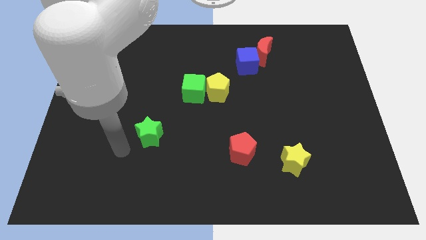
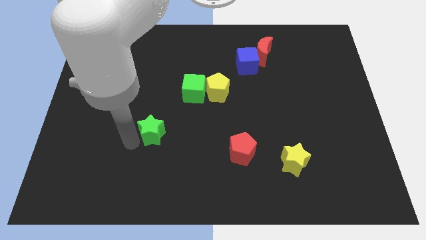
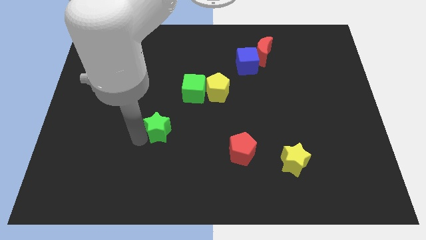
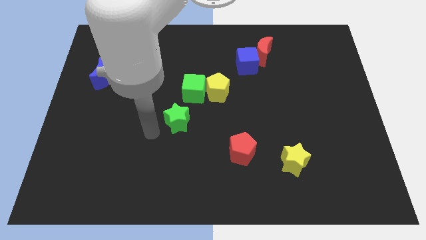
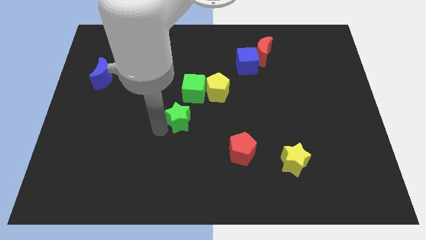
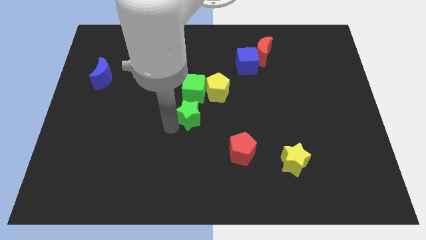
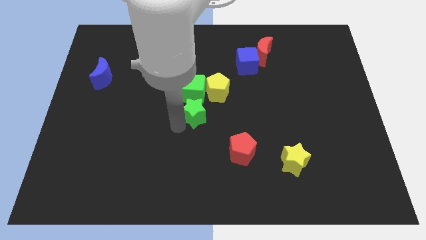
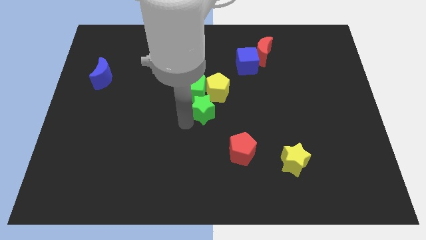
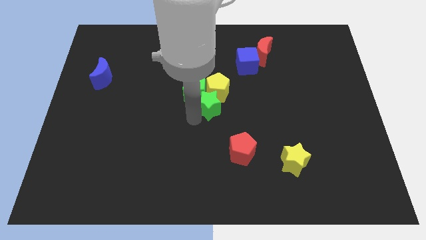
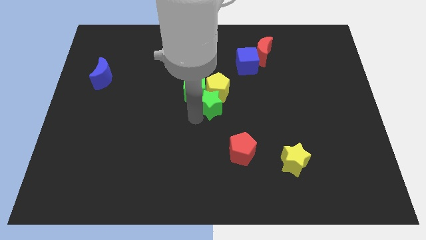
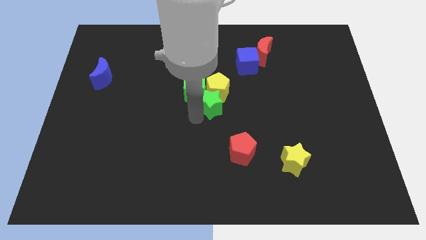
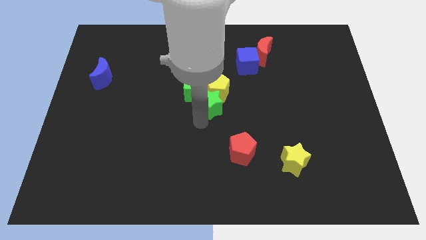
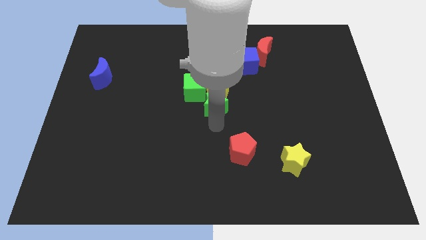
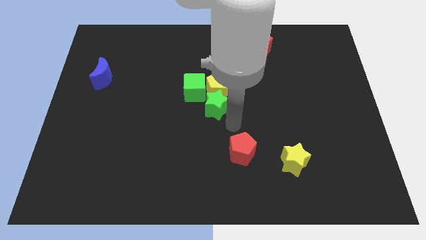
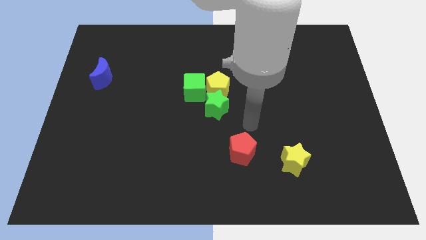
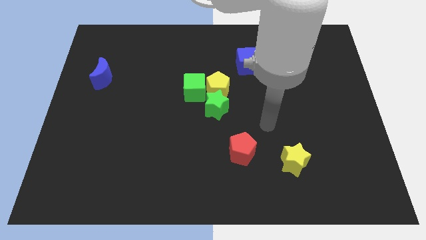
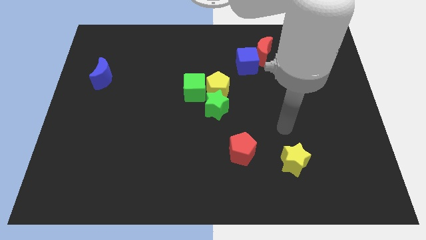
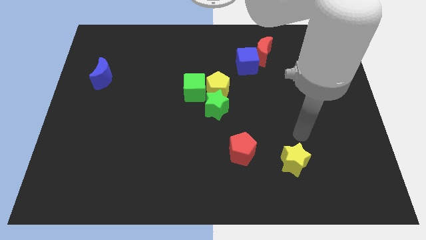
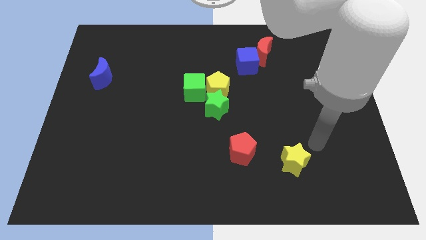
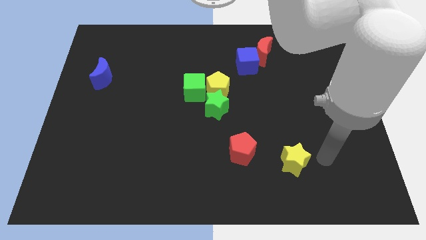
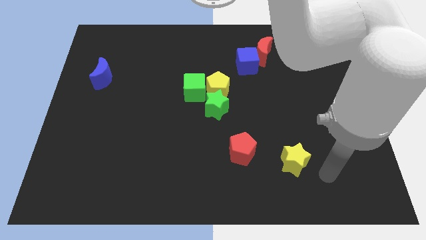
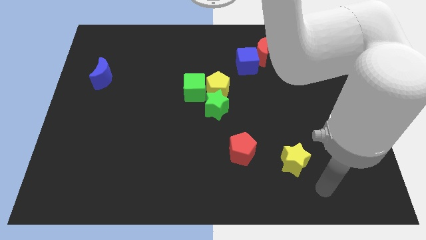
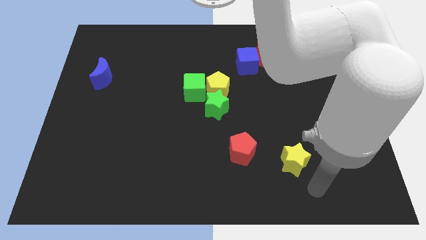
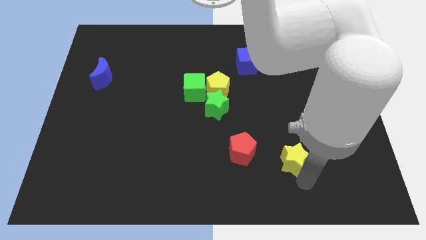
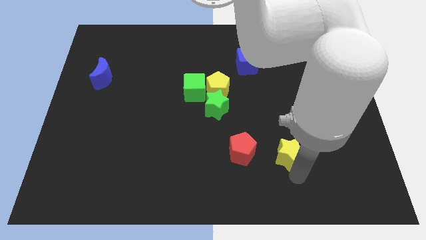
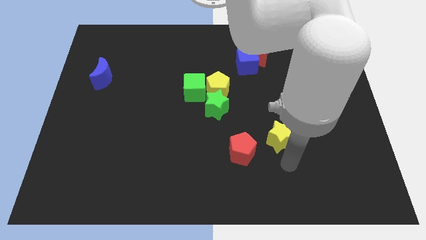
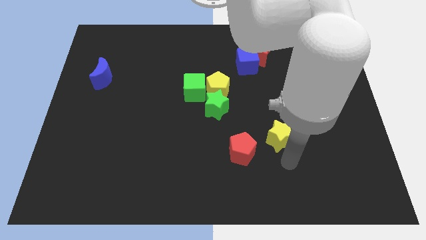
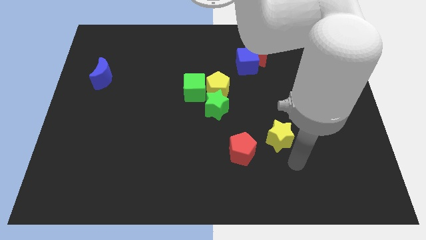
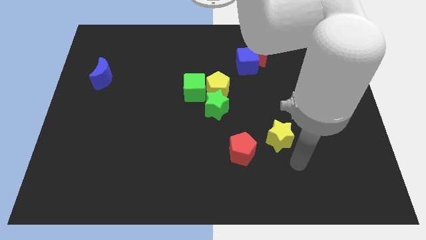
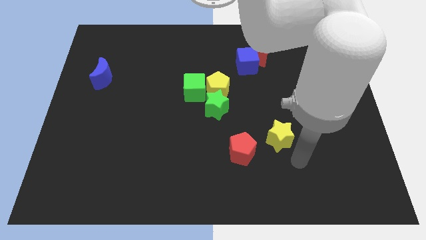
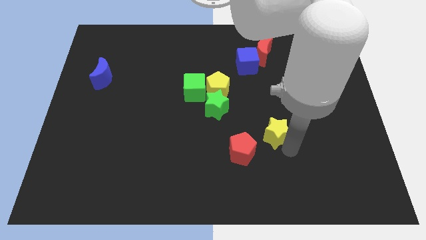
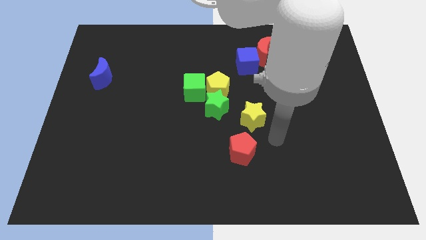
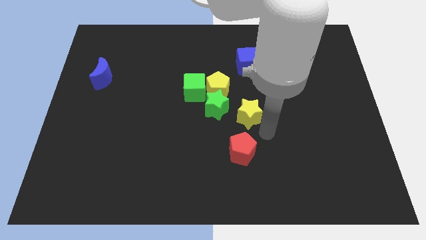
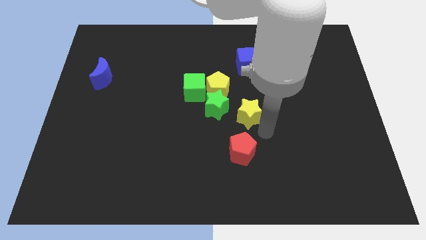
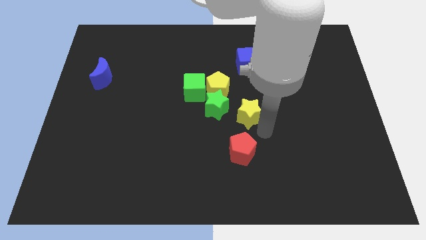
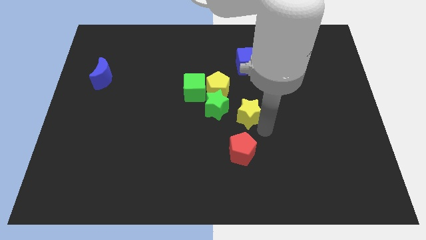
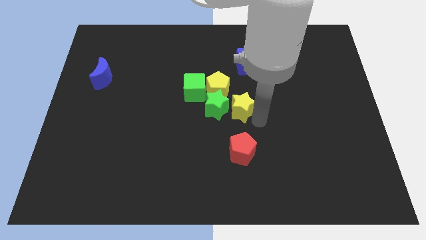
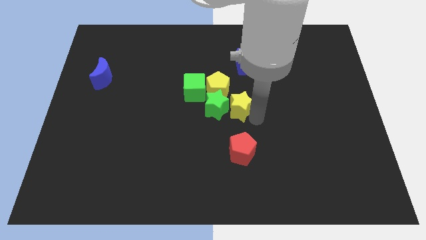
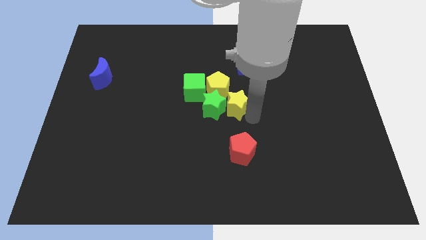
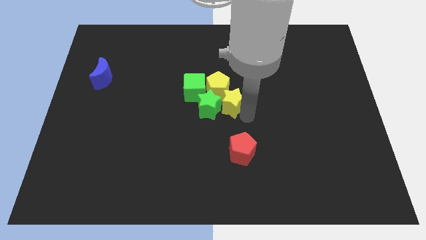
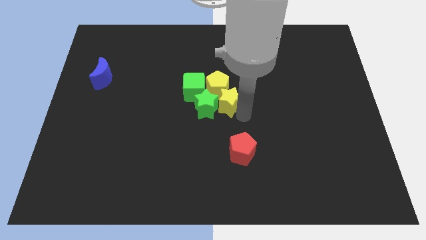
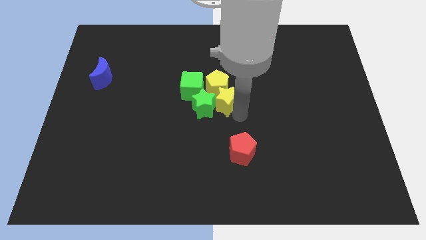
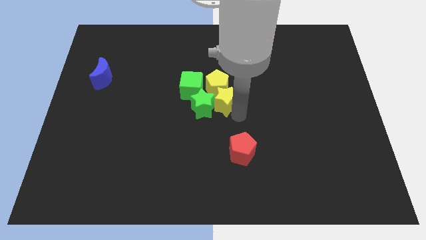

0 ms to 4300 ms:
slide the yellow star into the group of blocks

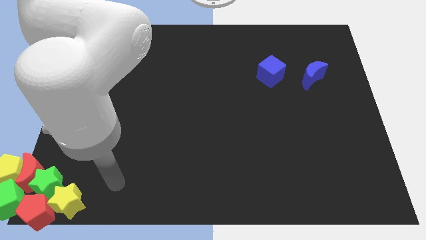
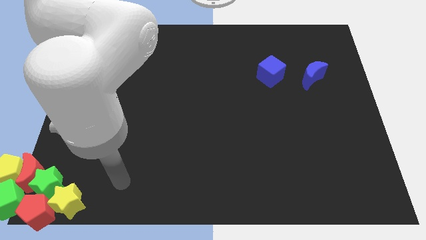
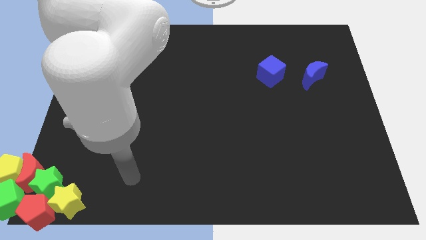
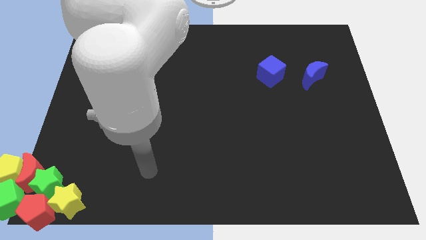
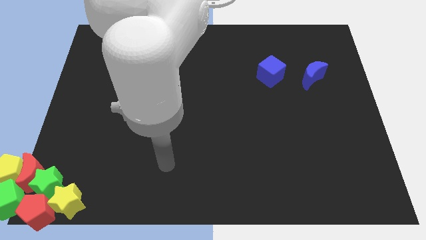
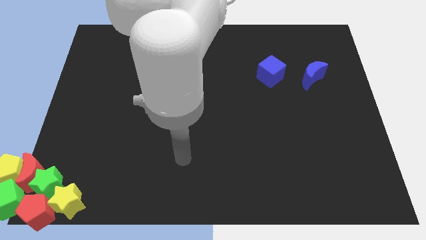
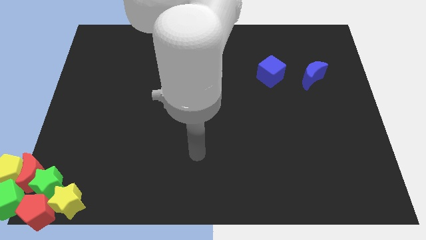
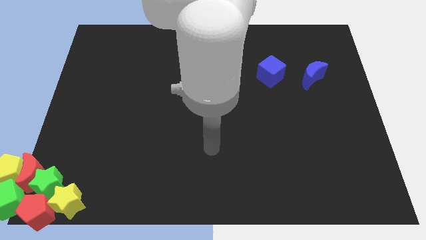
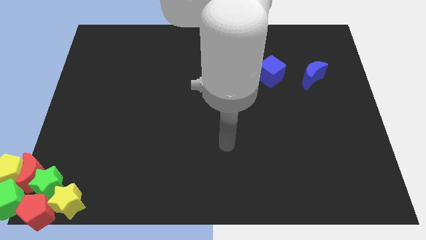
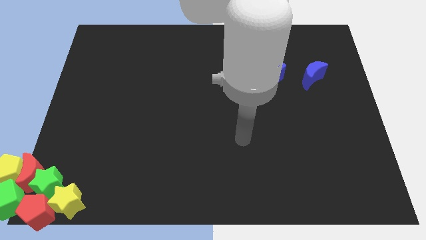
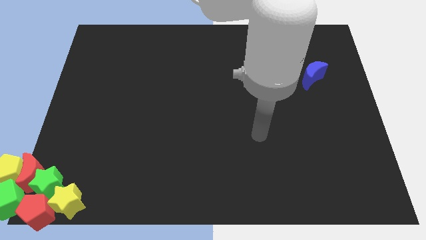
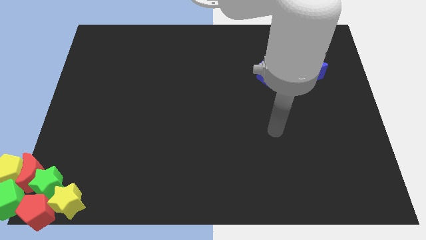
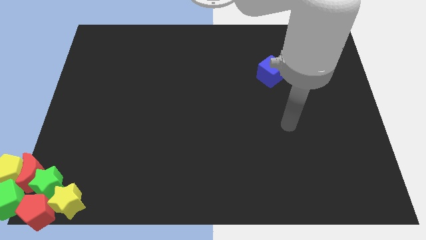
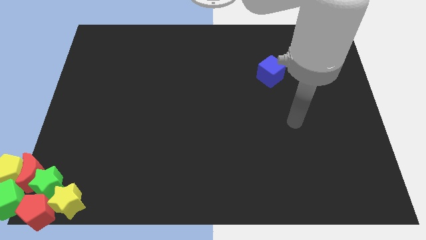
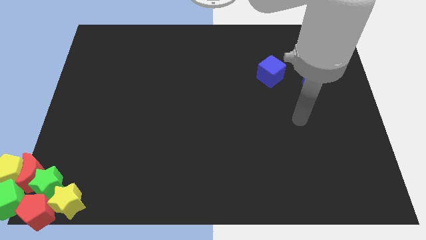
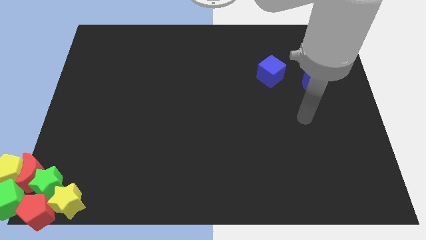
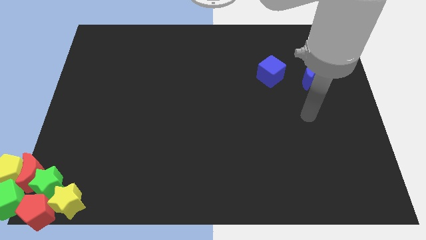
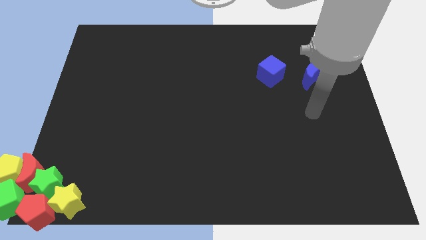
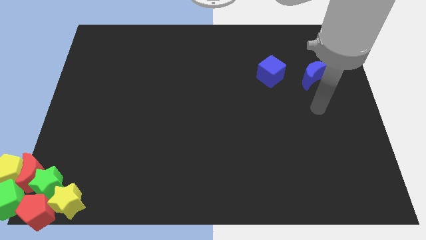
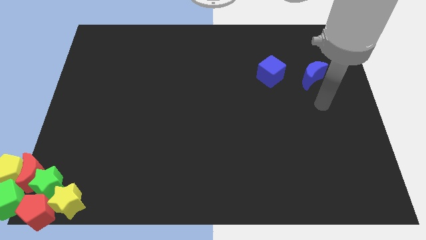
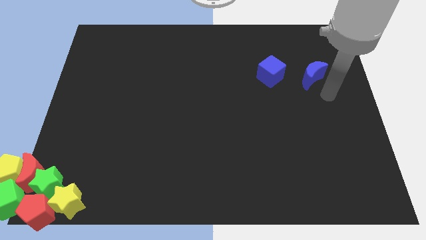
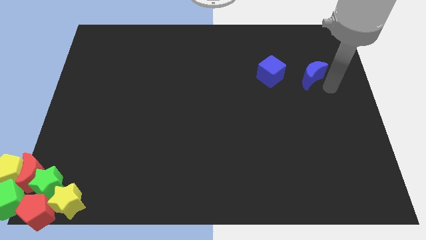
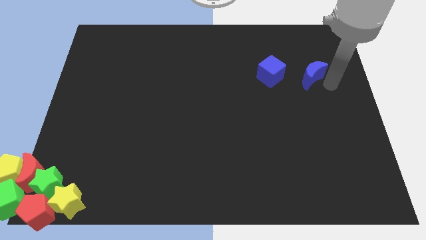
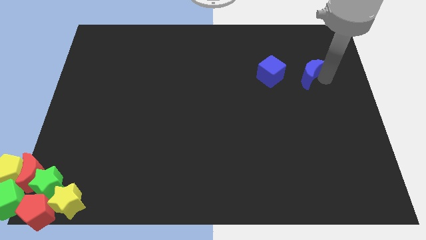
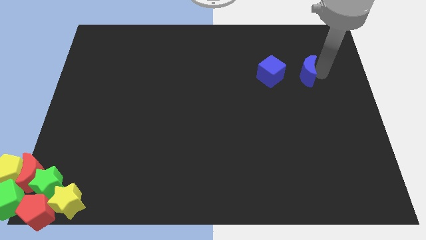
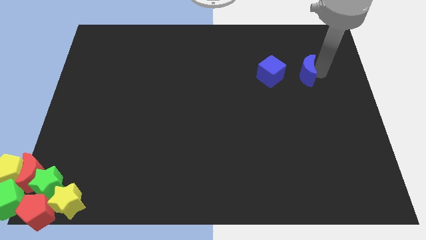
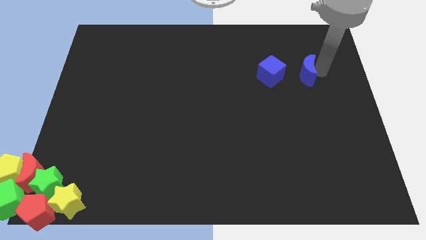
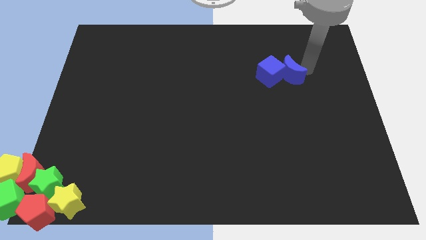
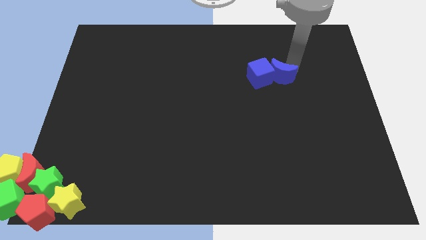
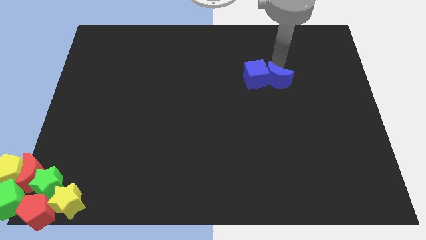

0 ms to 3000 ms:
make the blue crescent to touch the right side of the blue cube

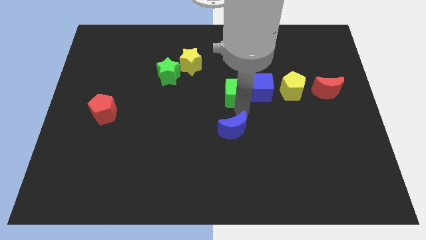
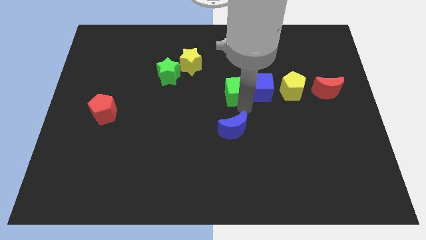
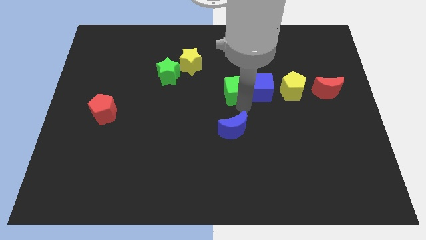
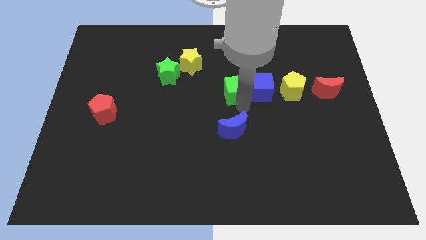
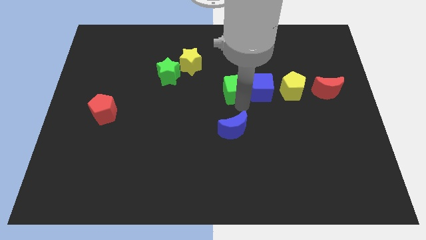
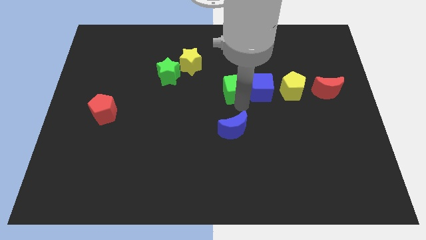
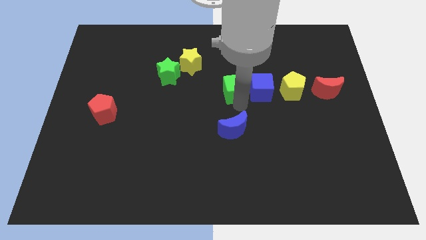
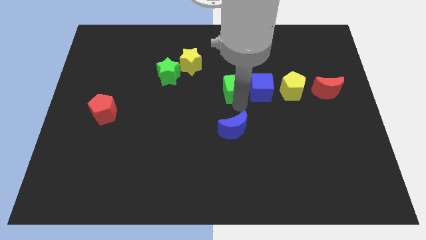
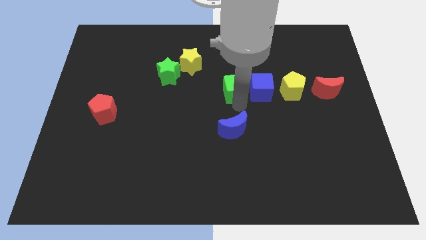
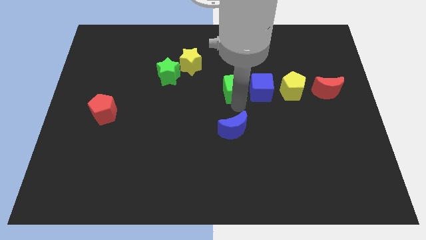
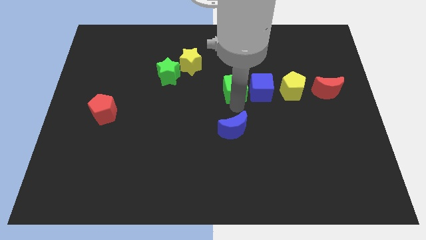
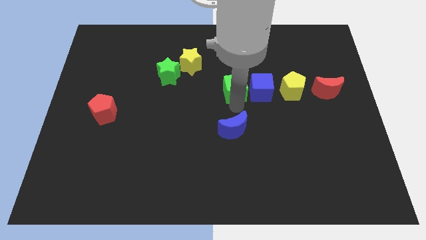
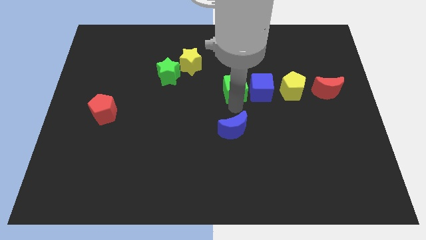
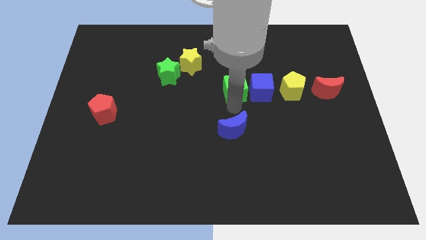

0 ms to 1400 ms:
adjust the green cube to the left side of the blue cube

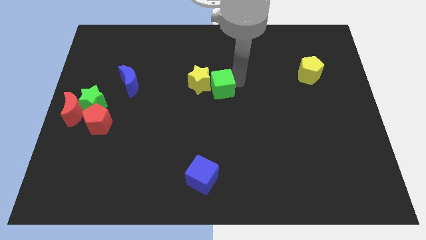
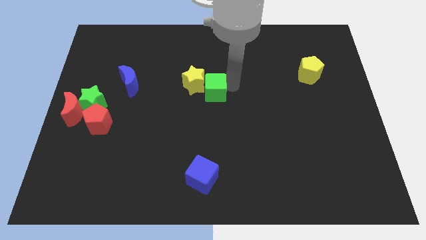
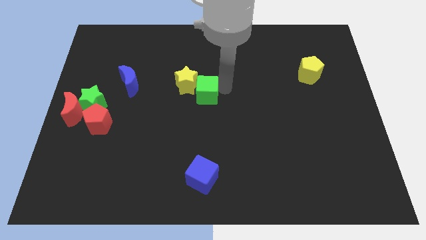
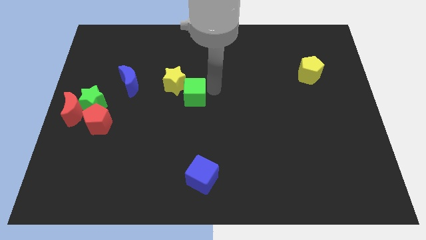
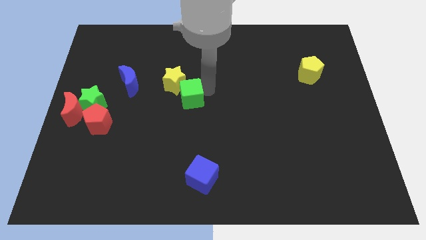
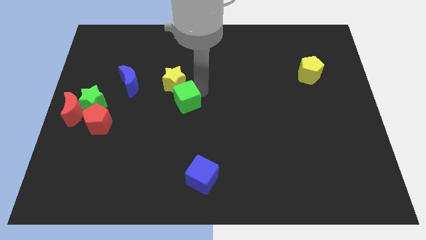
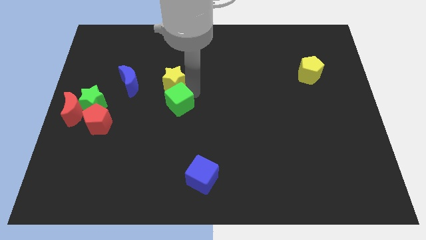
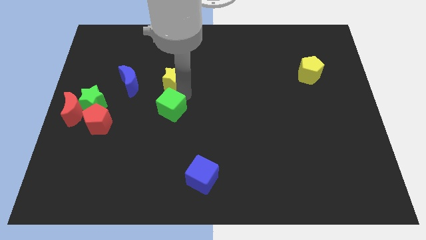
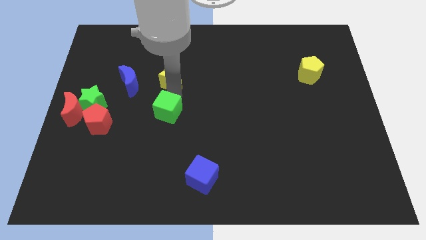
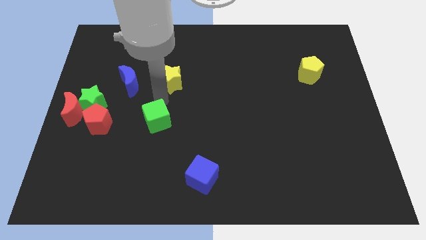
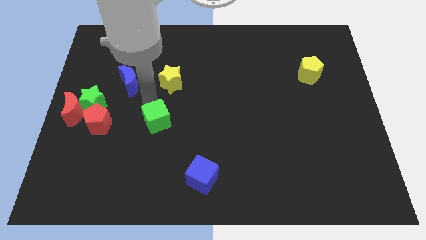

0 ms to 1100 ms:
separate green cube from yellow star
